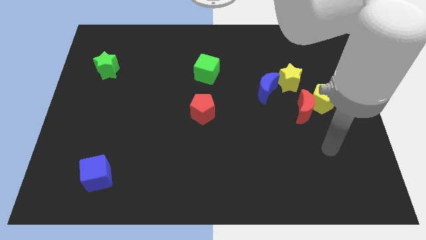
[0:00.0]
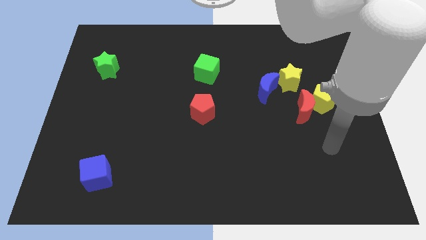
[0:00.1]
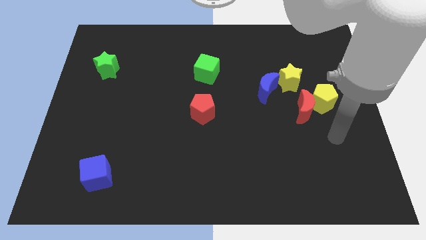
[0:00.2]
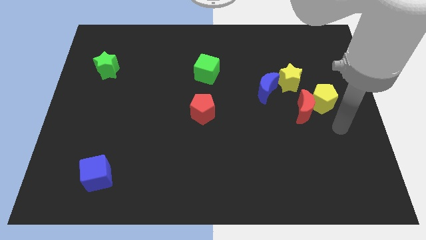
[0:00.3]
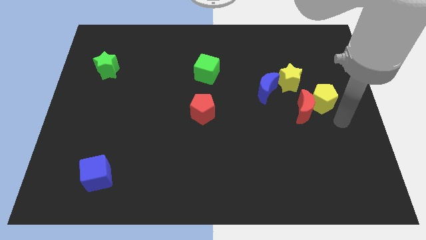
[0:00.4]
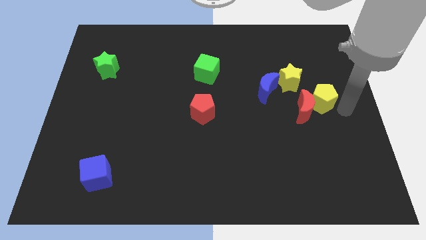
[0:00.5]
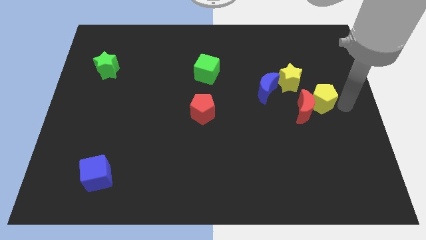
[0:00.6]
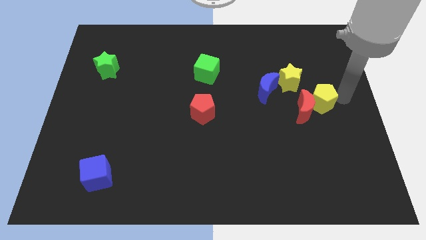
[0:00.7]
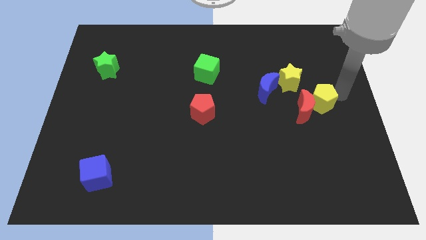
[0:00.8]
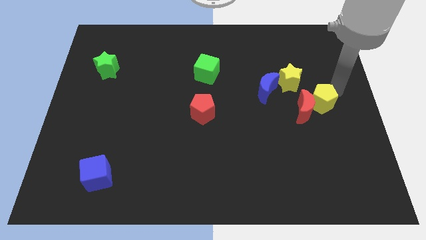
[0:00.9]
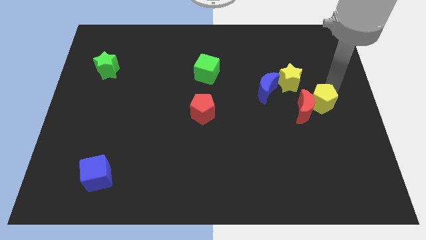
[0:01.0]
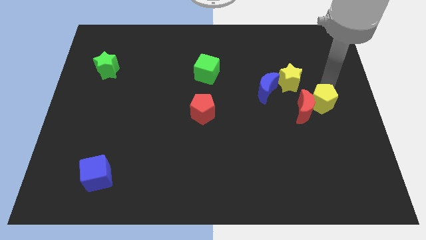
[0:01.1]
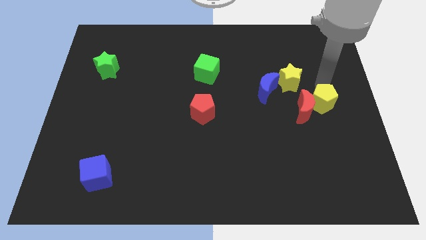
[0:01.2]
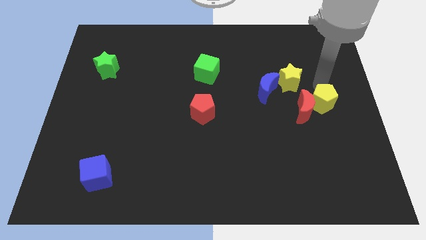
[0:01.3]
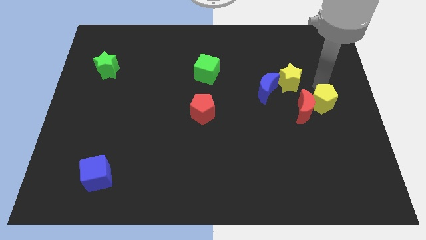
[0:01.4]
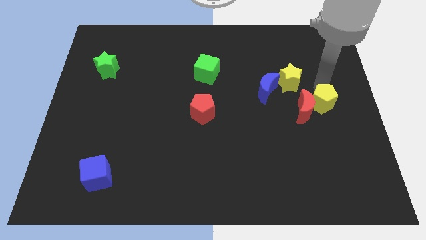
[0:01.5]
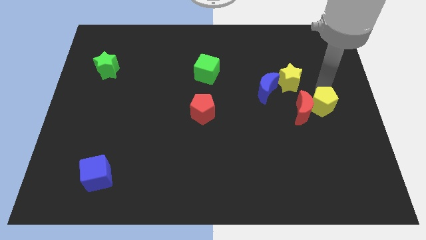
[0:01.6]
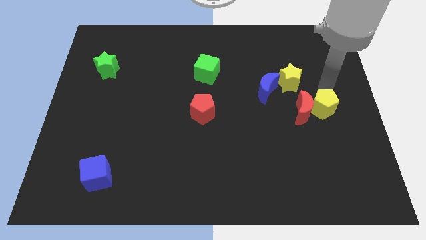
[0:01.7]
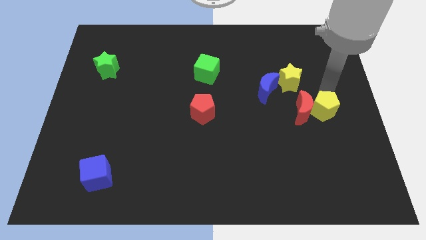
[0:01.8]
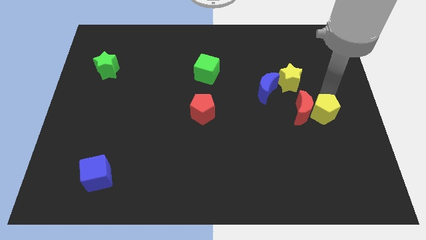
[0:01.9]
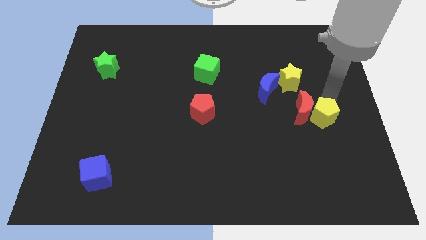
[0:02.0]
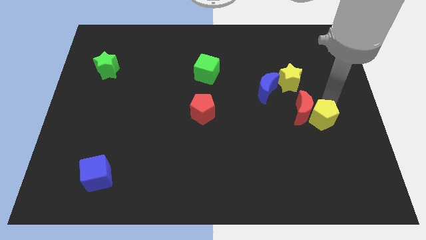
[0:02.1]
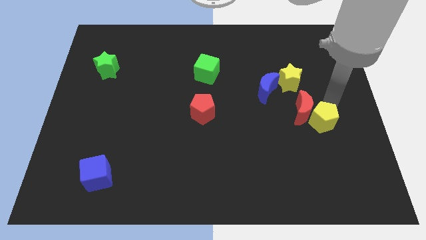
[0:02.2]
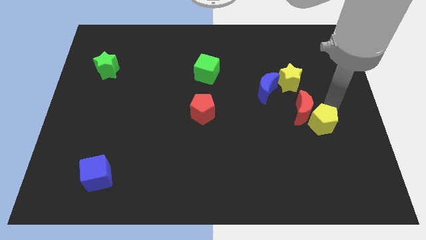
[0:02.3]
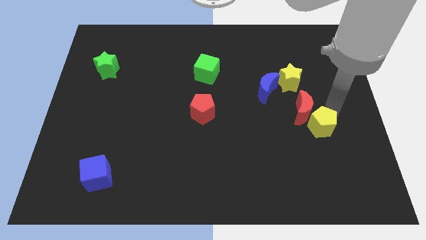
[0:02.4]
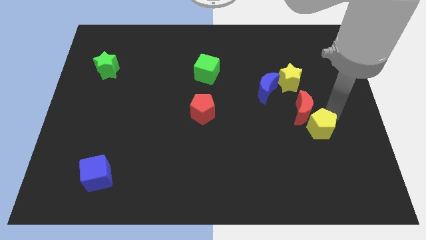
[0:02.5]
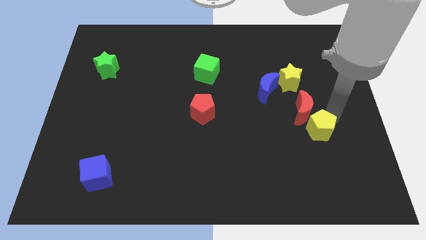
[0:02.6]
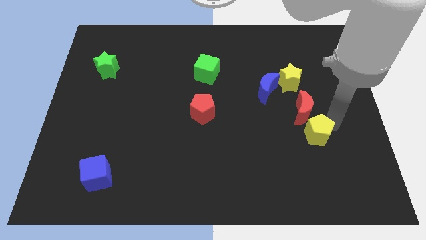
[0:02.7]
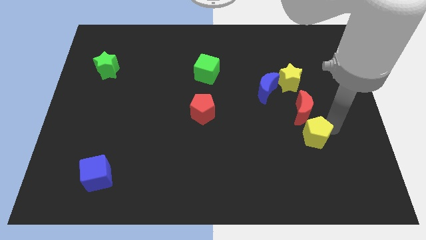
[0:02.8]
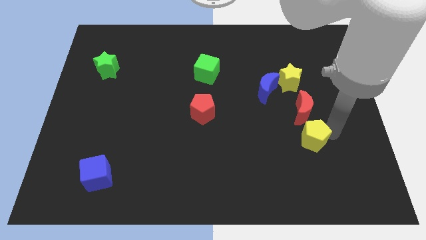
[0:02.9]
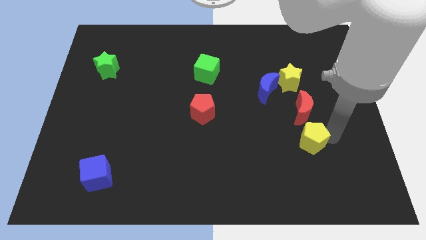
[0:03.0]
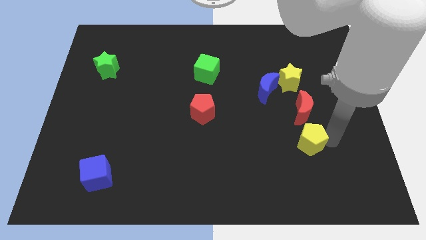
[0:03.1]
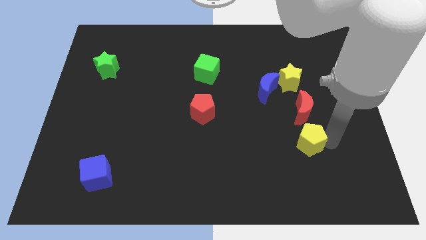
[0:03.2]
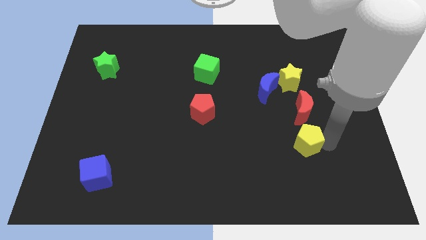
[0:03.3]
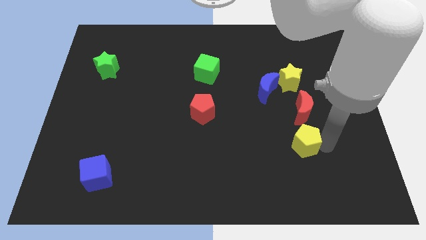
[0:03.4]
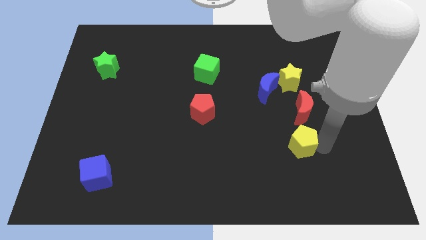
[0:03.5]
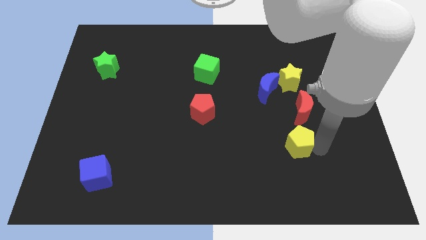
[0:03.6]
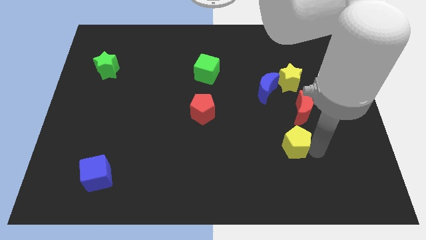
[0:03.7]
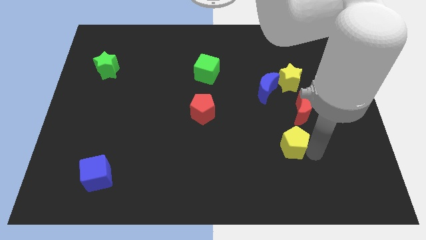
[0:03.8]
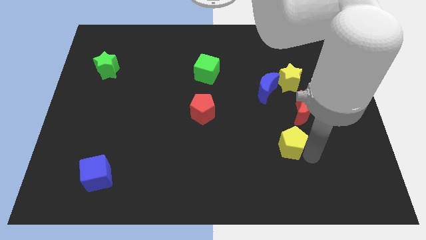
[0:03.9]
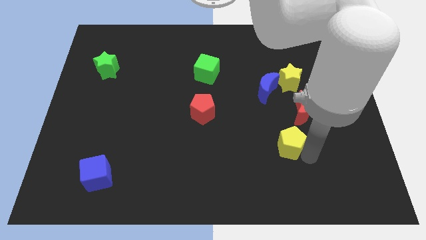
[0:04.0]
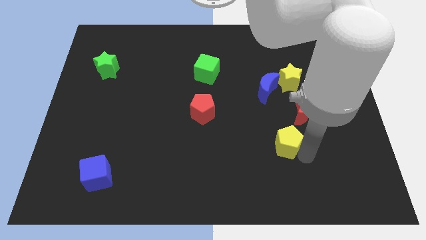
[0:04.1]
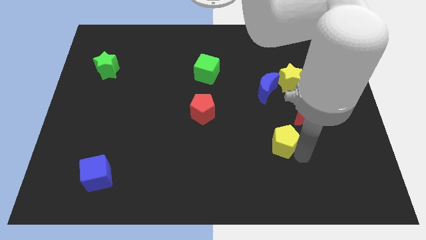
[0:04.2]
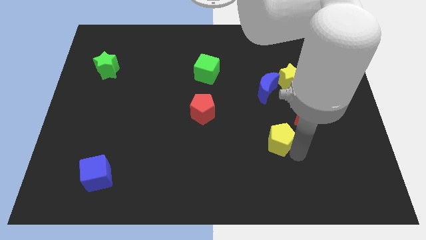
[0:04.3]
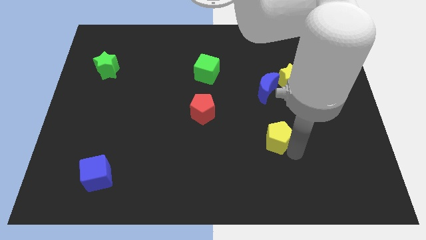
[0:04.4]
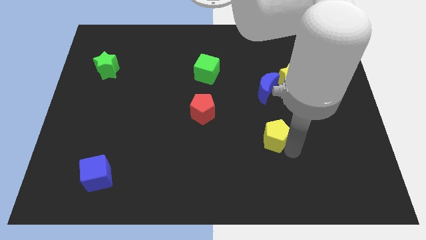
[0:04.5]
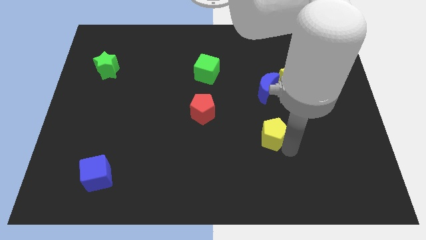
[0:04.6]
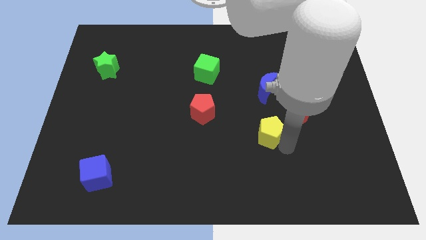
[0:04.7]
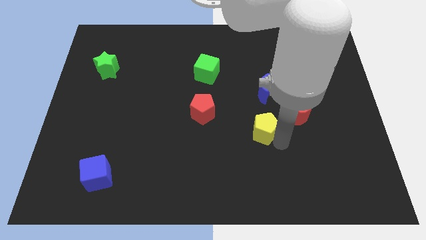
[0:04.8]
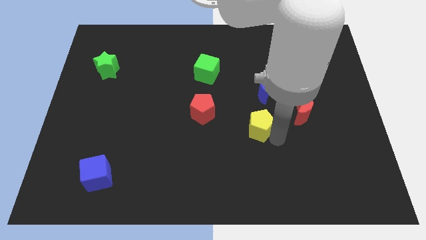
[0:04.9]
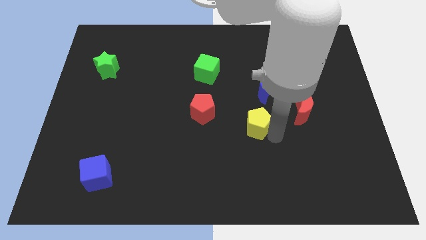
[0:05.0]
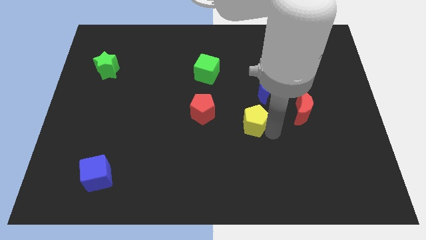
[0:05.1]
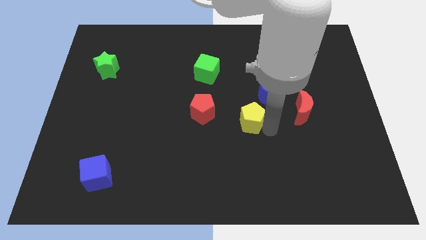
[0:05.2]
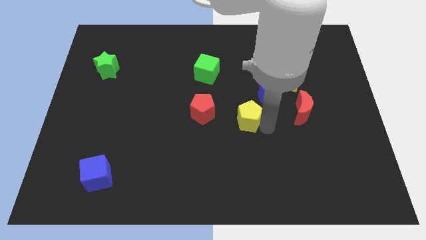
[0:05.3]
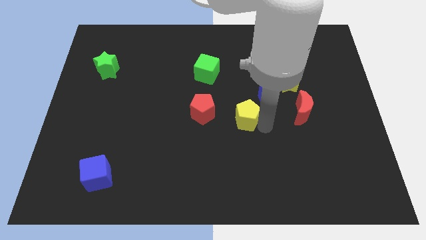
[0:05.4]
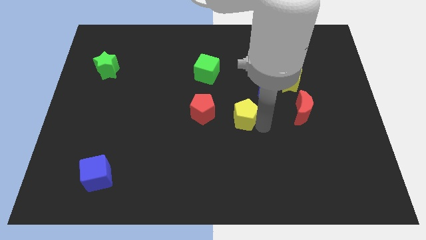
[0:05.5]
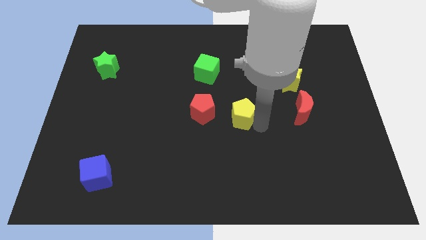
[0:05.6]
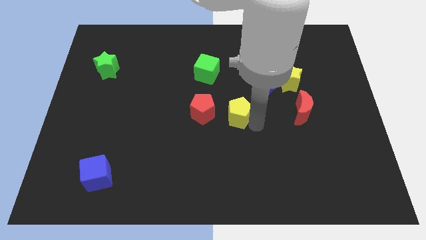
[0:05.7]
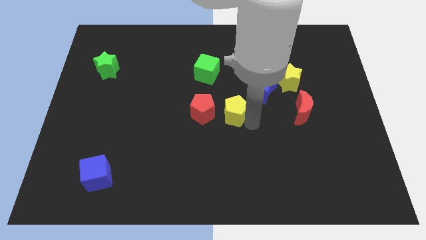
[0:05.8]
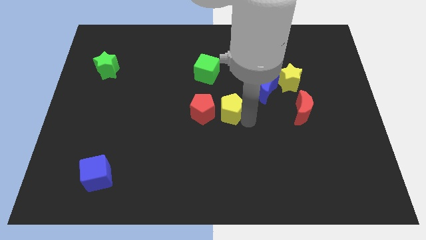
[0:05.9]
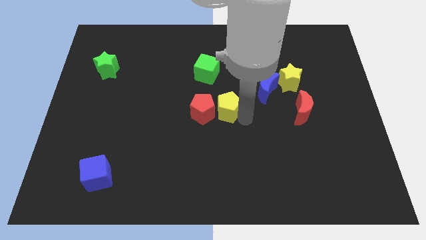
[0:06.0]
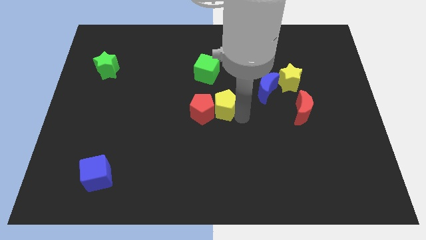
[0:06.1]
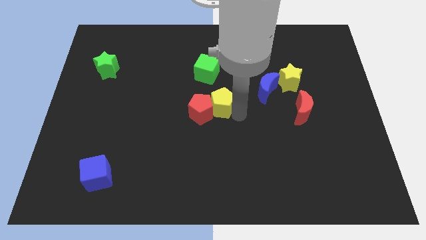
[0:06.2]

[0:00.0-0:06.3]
put the yellow pentagon close to the red pentagon

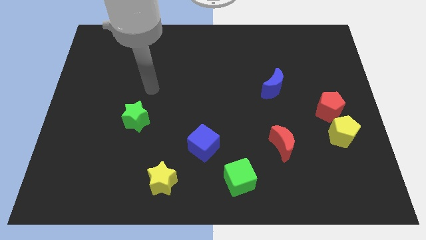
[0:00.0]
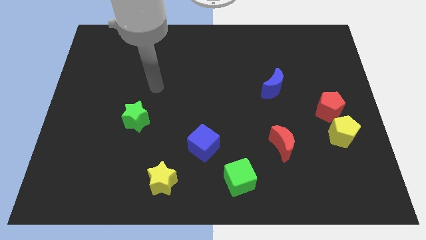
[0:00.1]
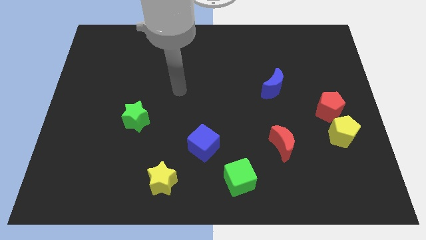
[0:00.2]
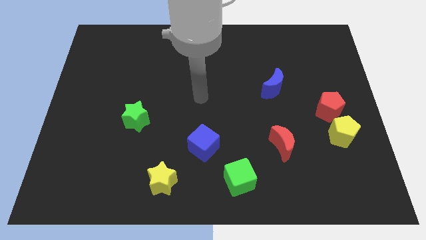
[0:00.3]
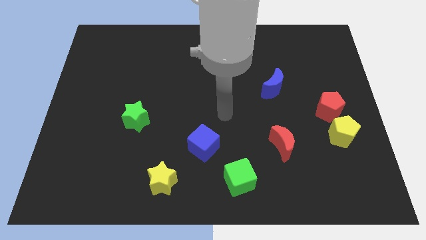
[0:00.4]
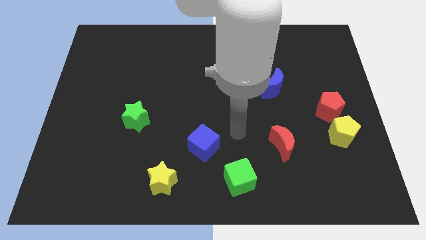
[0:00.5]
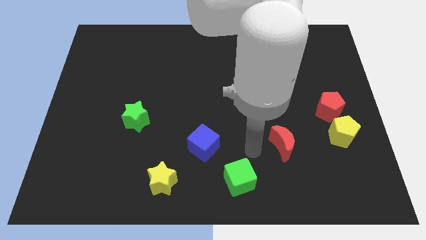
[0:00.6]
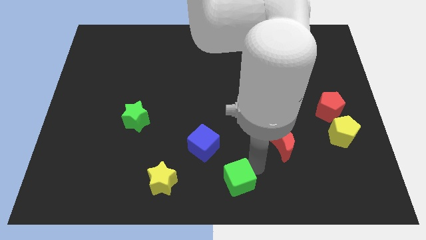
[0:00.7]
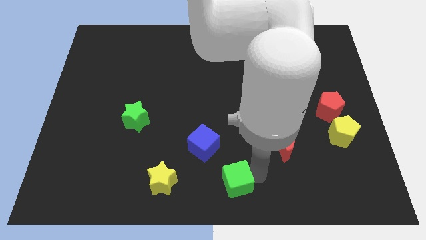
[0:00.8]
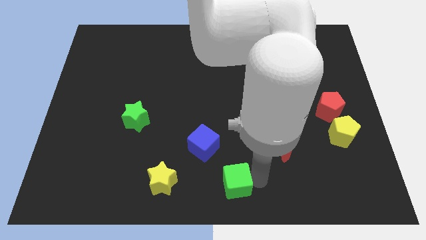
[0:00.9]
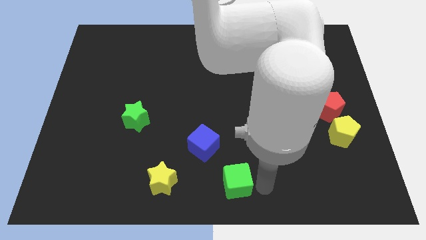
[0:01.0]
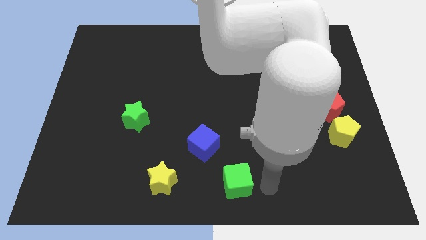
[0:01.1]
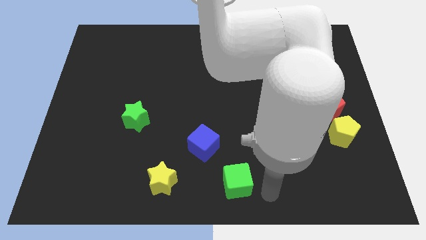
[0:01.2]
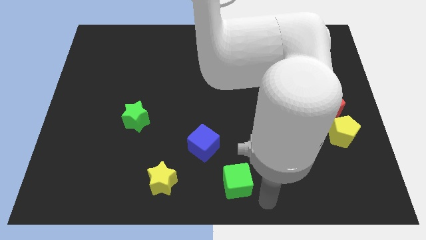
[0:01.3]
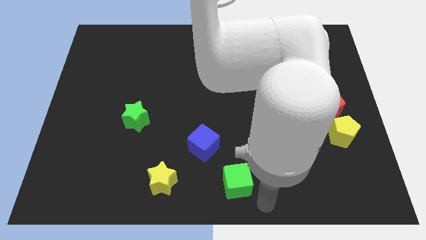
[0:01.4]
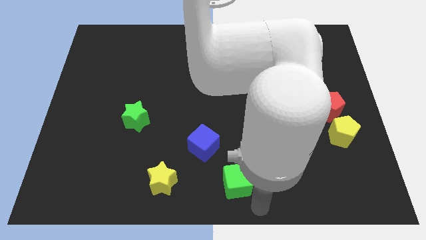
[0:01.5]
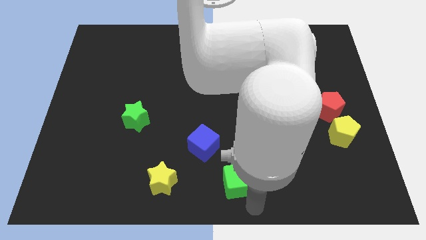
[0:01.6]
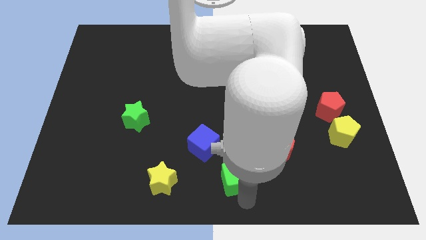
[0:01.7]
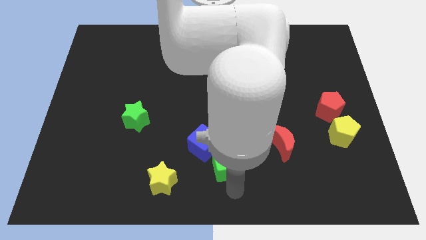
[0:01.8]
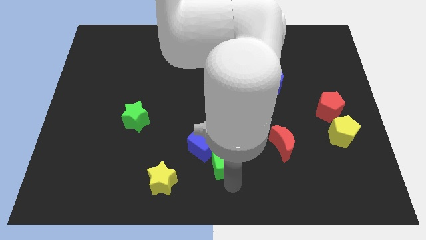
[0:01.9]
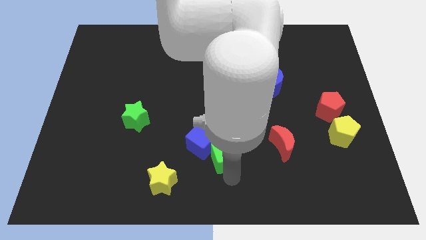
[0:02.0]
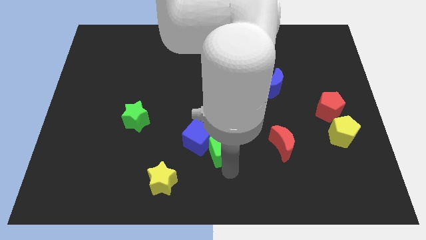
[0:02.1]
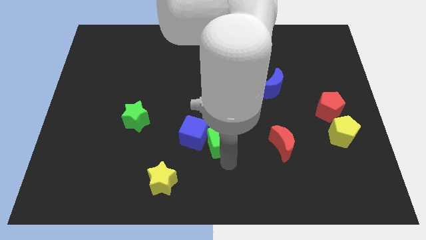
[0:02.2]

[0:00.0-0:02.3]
put the green cube towards the blue cube

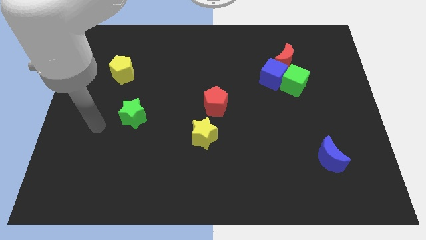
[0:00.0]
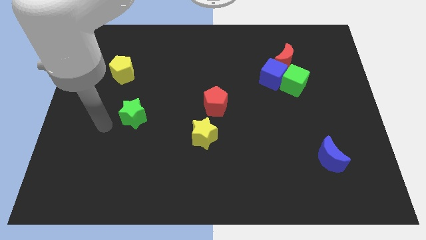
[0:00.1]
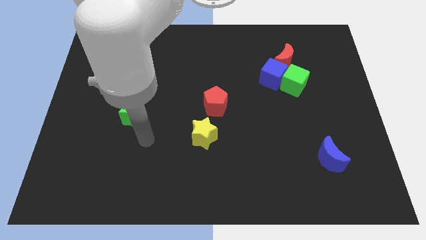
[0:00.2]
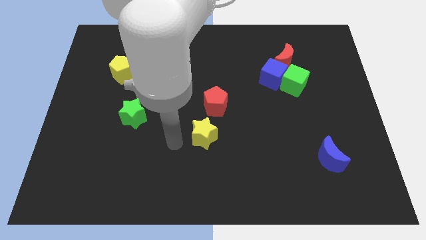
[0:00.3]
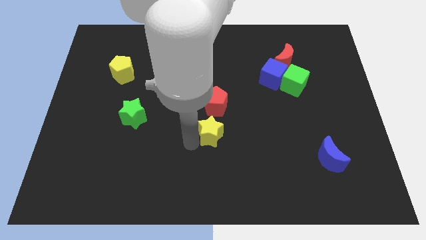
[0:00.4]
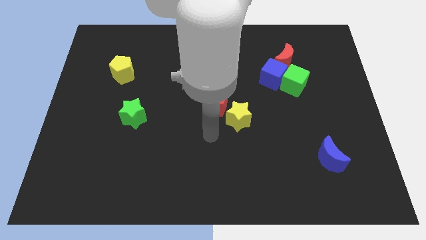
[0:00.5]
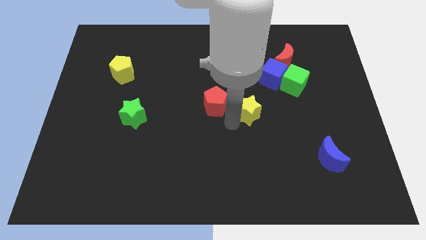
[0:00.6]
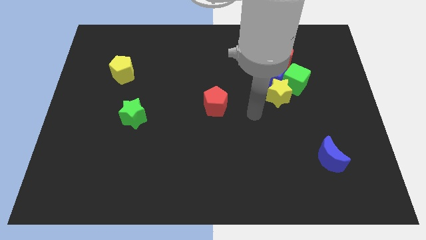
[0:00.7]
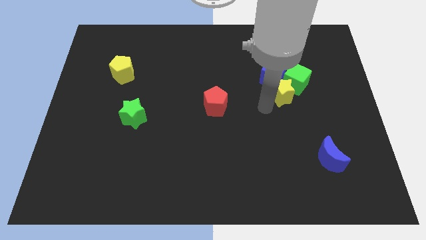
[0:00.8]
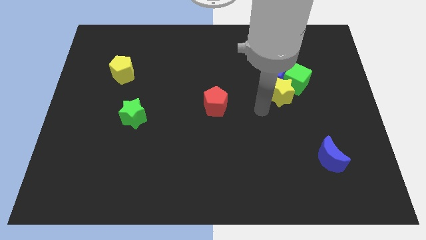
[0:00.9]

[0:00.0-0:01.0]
move the yellow star next to the green cube
